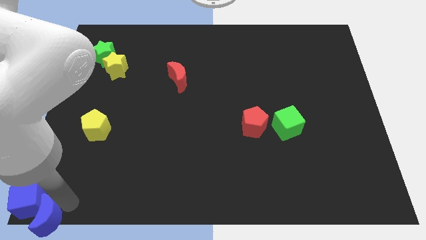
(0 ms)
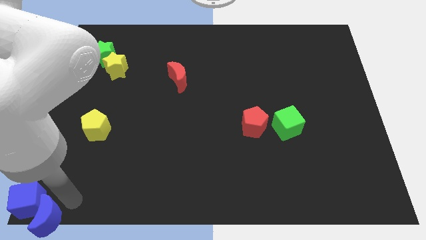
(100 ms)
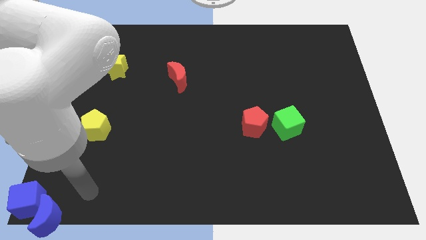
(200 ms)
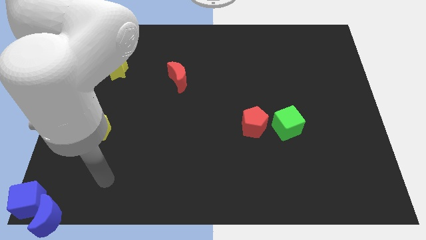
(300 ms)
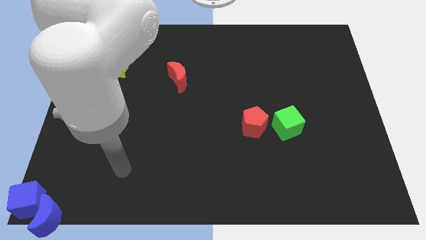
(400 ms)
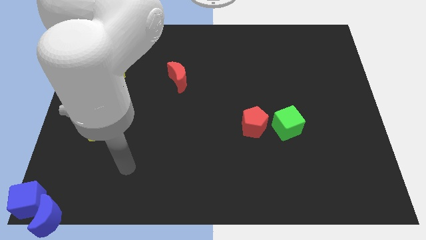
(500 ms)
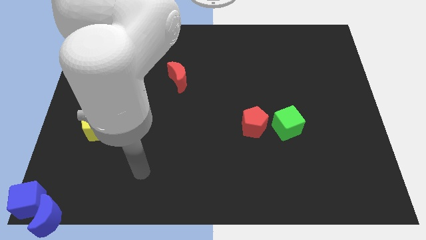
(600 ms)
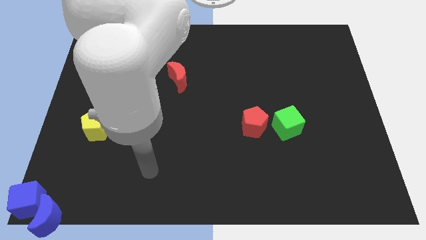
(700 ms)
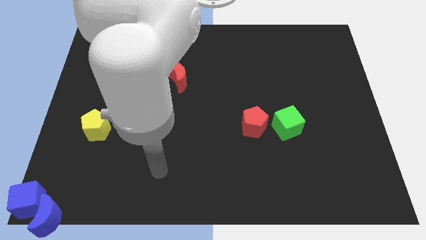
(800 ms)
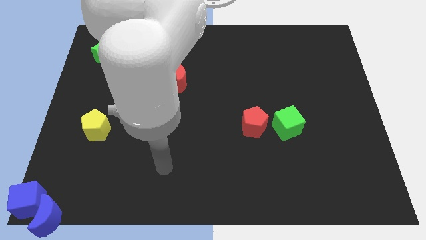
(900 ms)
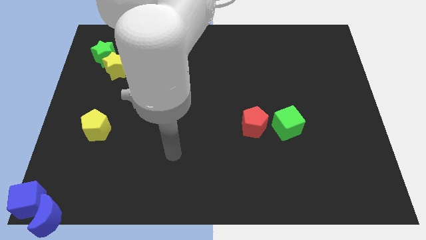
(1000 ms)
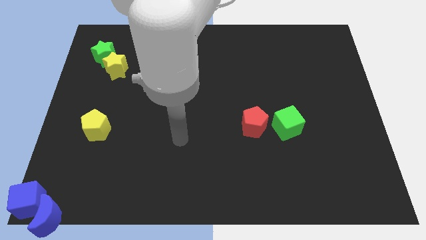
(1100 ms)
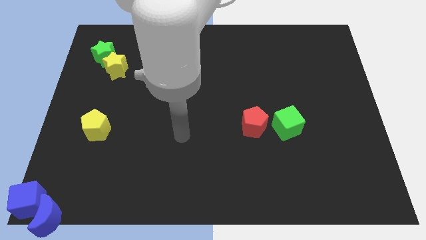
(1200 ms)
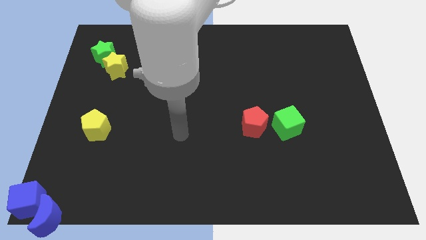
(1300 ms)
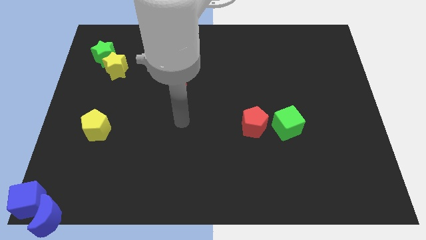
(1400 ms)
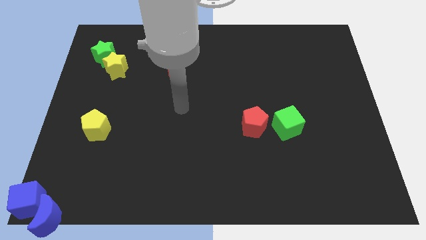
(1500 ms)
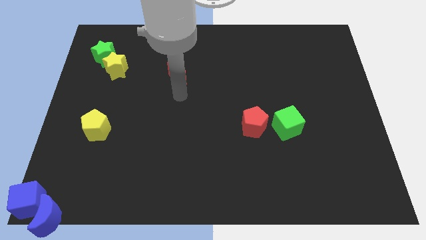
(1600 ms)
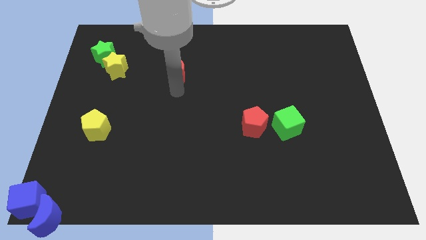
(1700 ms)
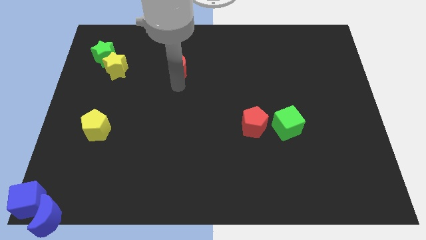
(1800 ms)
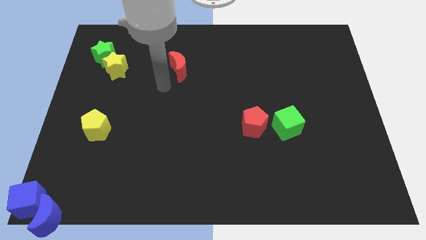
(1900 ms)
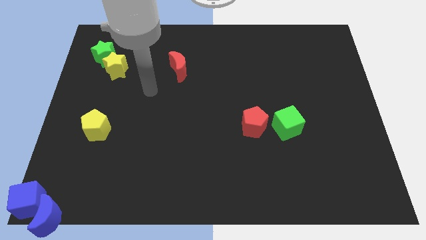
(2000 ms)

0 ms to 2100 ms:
move your arm away from the blue moon

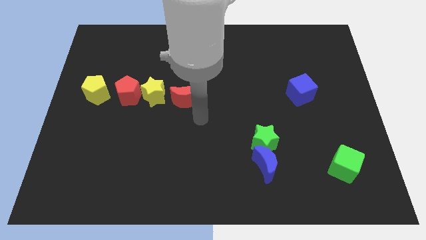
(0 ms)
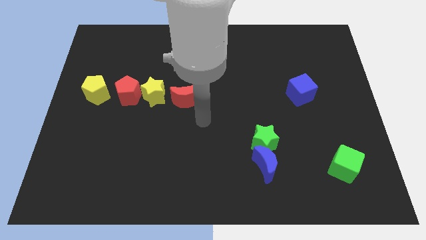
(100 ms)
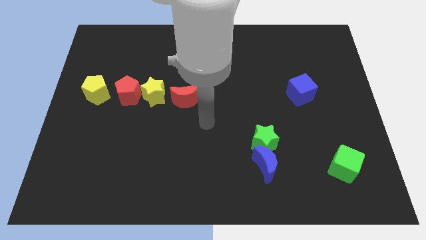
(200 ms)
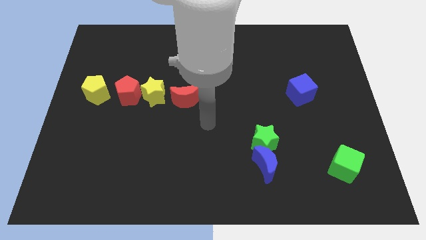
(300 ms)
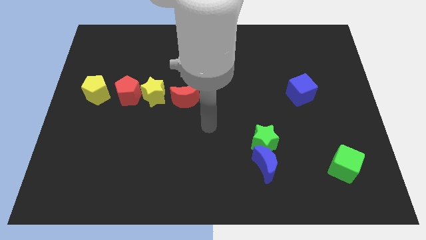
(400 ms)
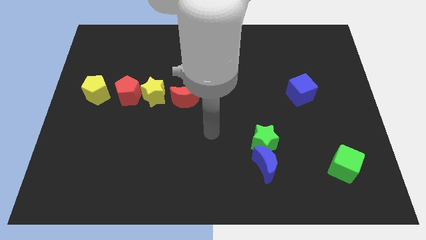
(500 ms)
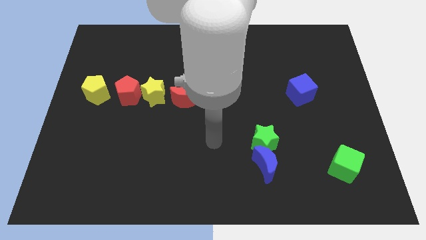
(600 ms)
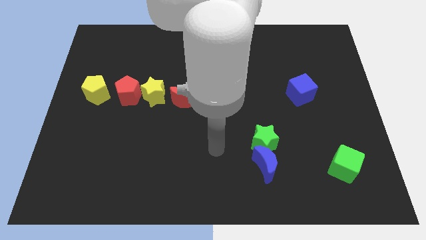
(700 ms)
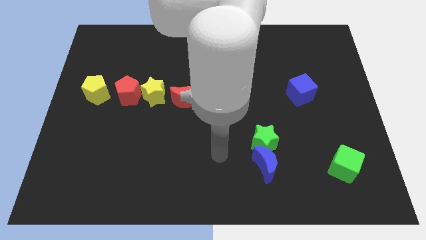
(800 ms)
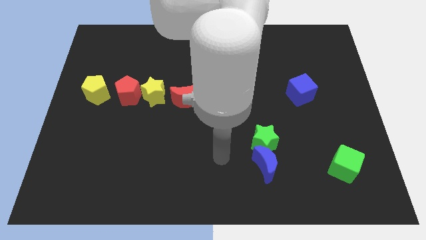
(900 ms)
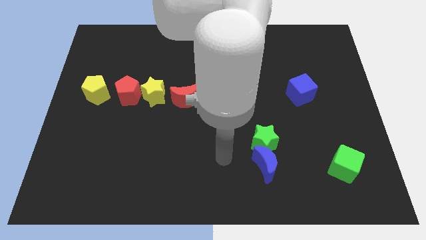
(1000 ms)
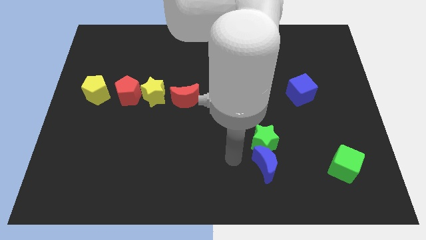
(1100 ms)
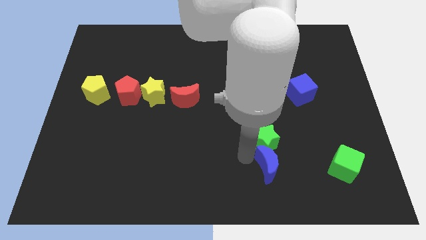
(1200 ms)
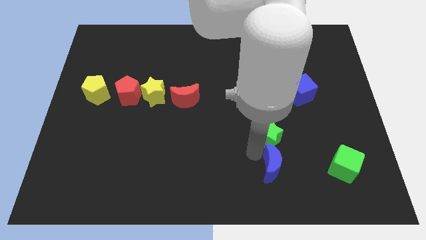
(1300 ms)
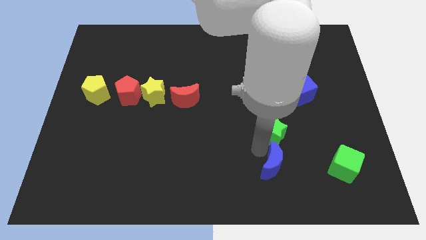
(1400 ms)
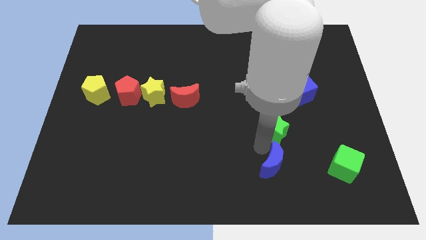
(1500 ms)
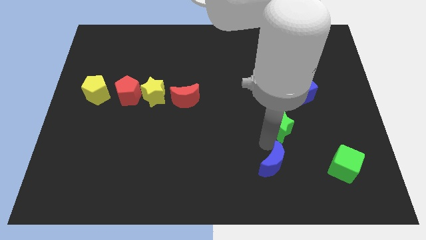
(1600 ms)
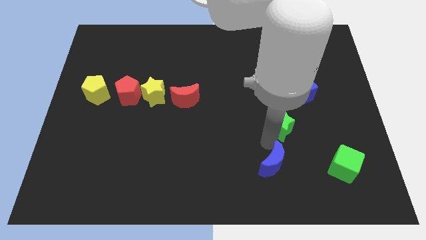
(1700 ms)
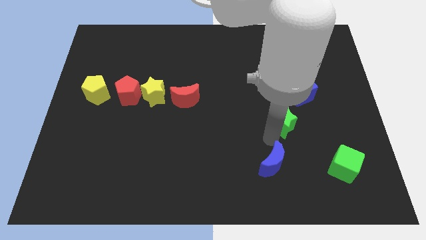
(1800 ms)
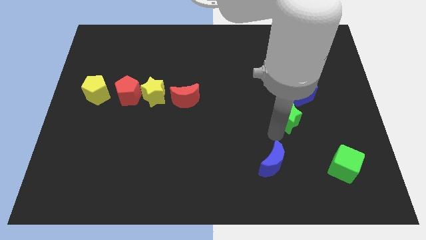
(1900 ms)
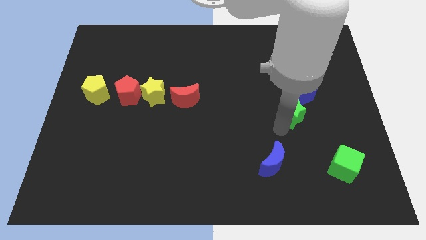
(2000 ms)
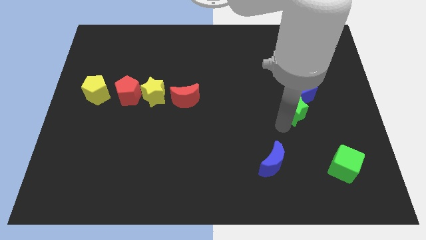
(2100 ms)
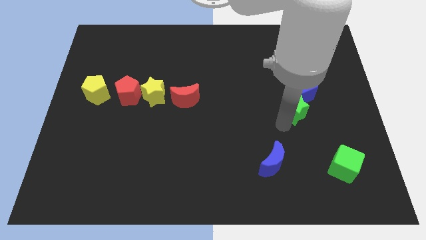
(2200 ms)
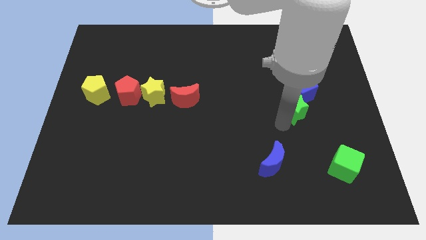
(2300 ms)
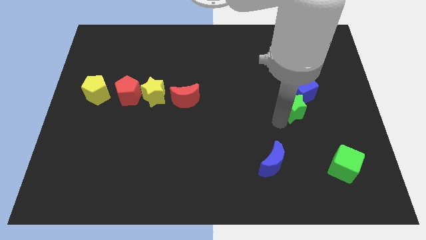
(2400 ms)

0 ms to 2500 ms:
push the green star close to the blue cube

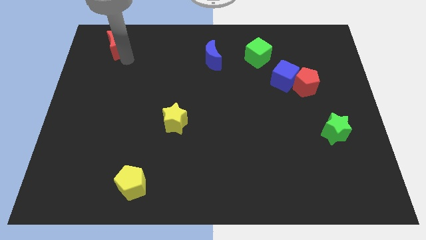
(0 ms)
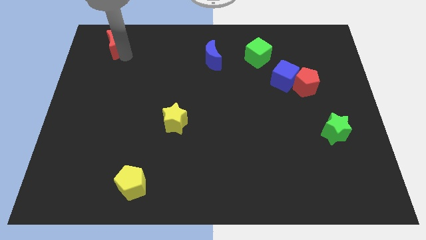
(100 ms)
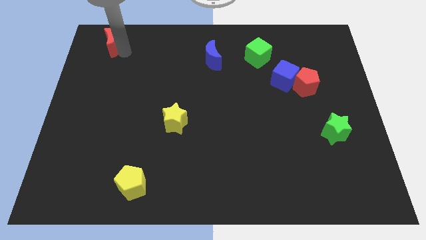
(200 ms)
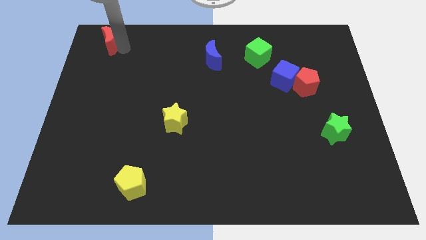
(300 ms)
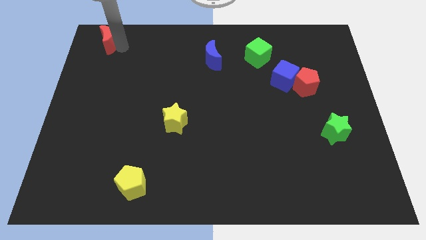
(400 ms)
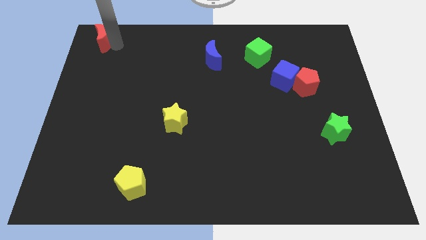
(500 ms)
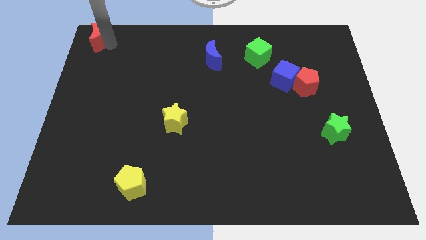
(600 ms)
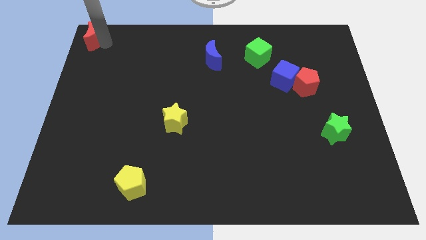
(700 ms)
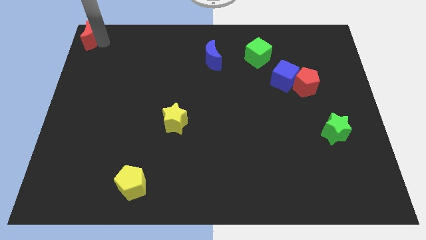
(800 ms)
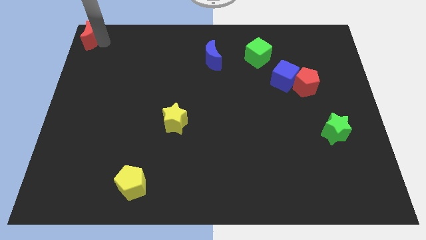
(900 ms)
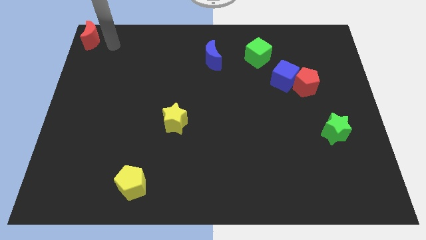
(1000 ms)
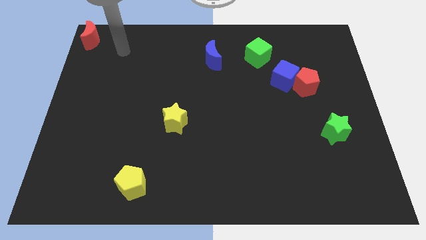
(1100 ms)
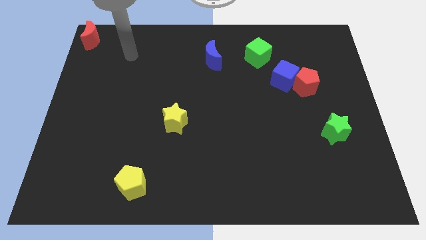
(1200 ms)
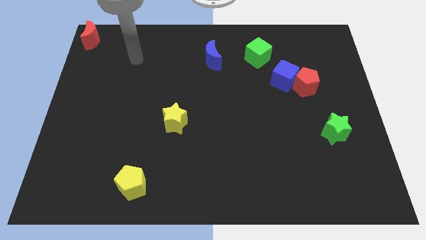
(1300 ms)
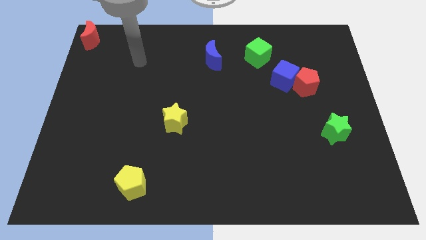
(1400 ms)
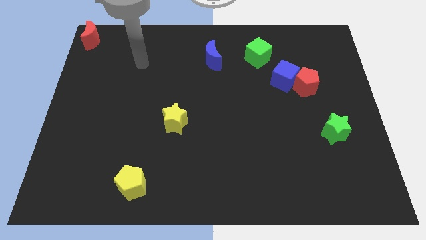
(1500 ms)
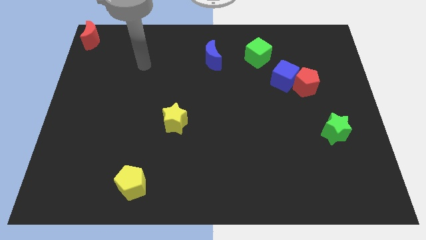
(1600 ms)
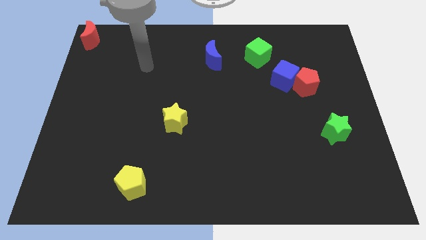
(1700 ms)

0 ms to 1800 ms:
place the red moon to the top left

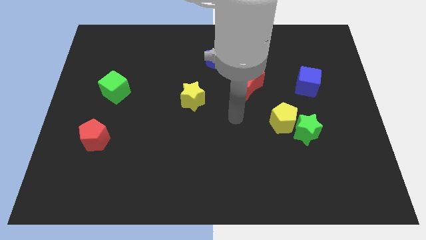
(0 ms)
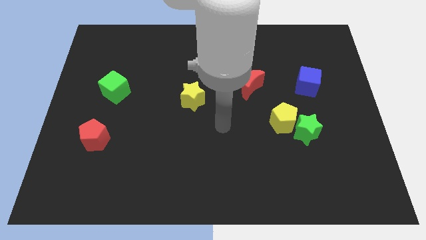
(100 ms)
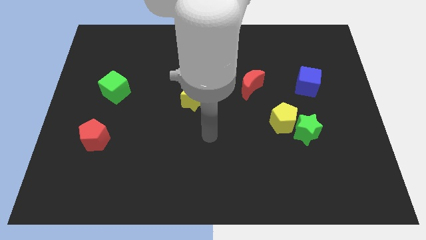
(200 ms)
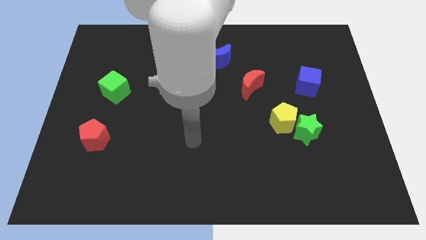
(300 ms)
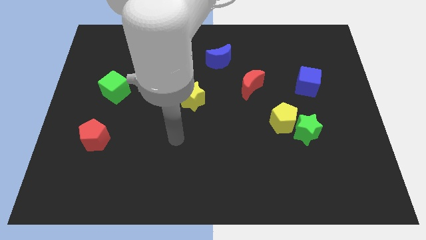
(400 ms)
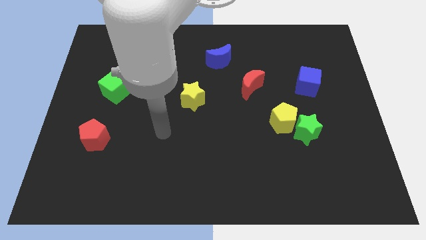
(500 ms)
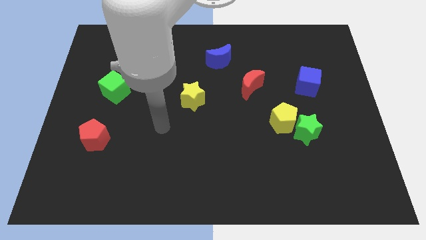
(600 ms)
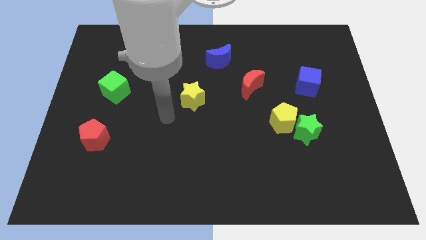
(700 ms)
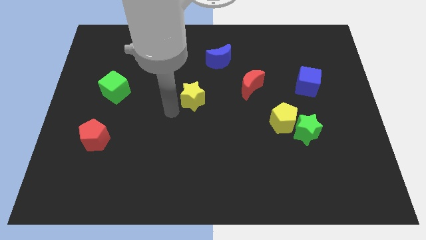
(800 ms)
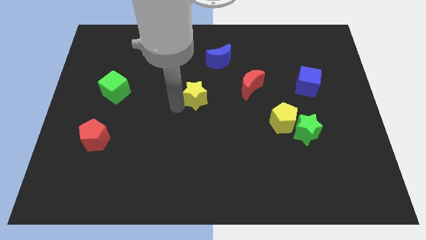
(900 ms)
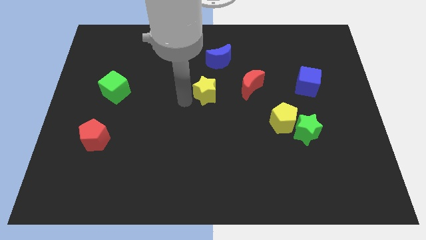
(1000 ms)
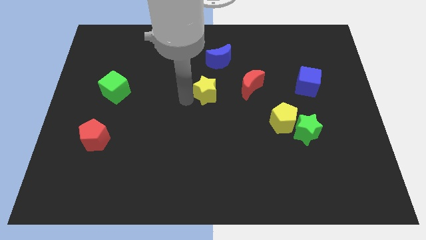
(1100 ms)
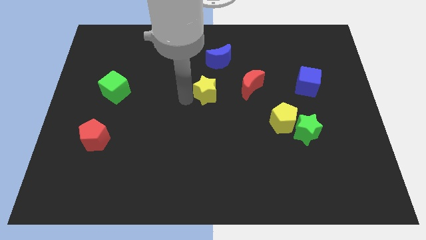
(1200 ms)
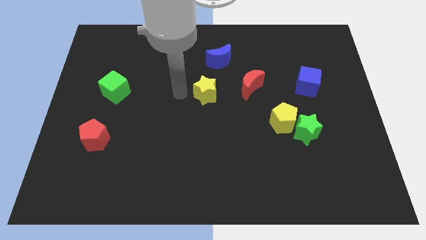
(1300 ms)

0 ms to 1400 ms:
move the yellow star to the right of the green cube

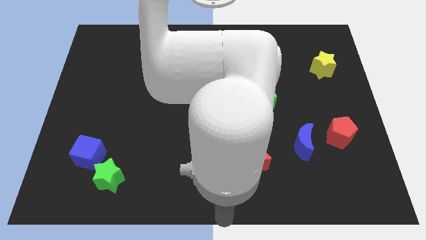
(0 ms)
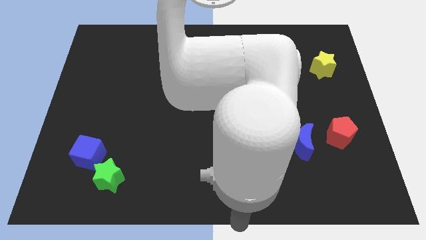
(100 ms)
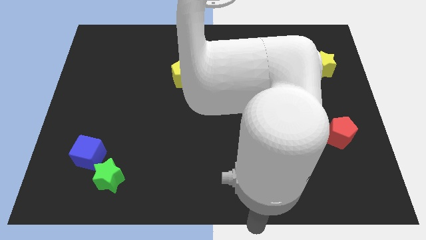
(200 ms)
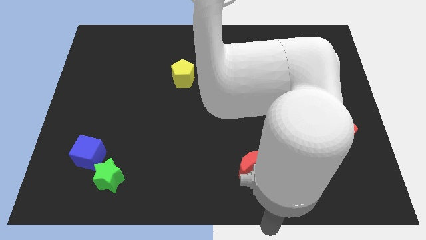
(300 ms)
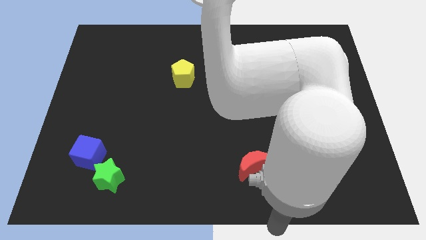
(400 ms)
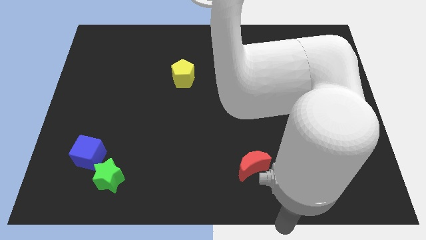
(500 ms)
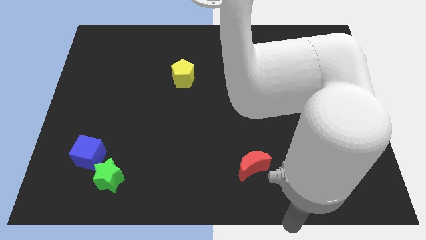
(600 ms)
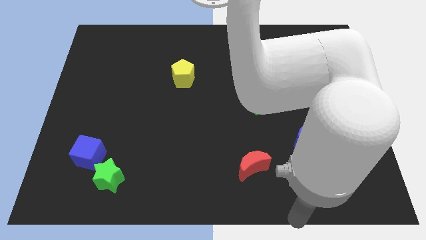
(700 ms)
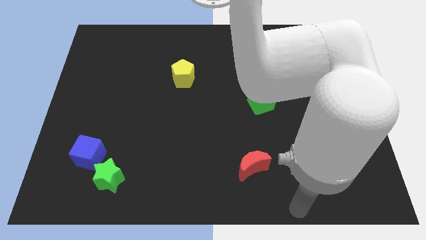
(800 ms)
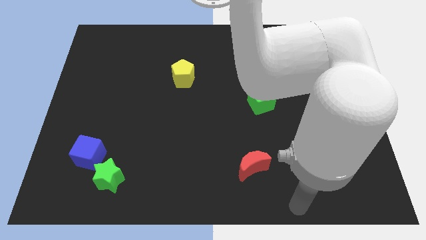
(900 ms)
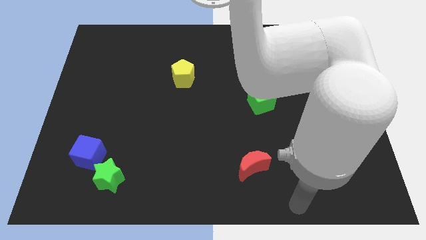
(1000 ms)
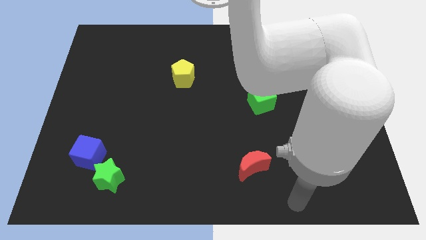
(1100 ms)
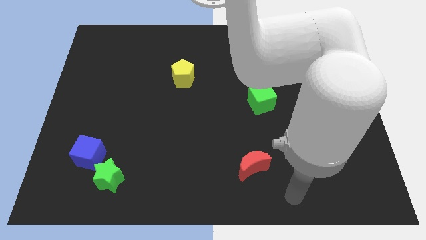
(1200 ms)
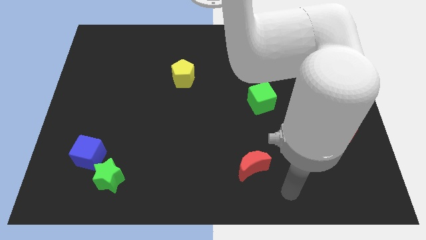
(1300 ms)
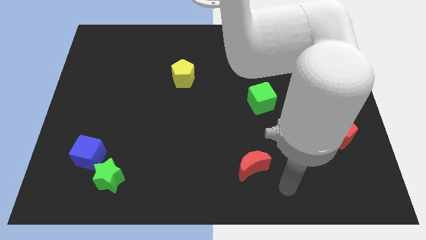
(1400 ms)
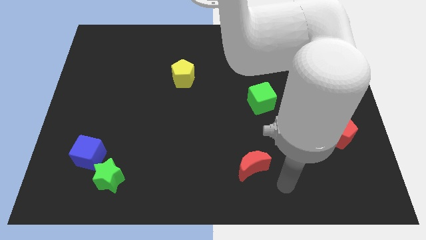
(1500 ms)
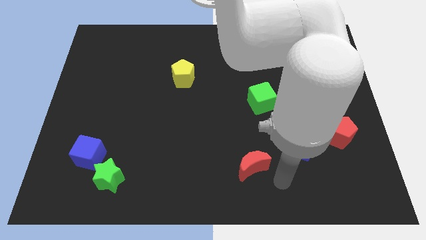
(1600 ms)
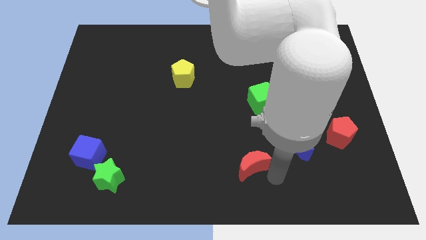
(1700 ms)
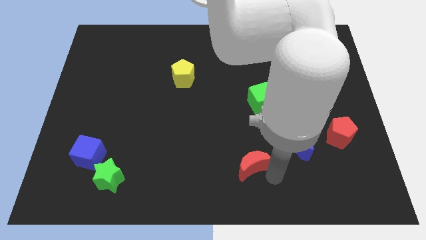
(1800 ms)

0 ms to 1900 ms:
move your arm to the bottom right of the red crescent
